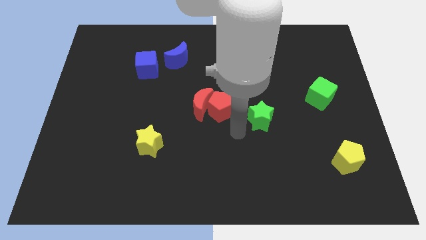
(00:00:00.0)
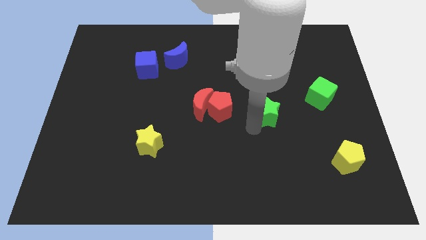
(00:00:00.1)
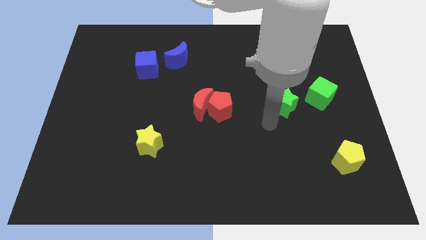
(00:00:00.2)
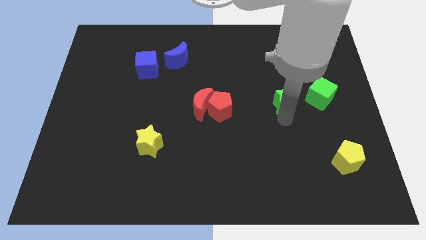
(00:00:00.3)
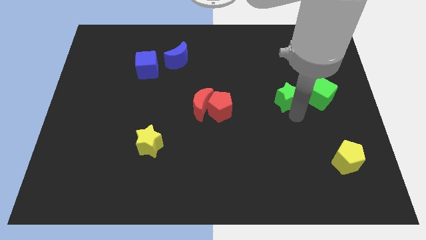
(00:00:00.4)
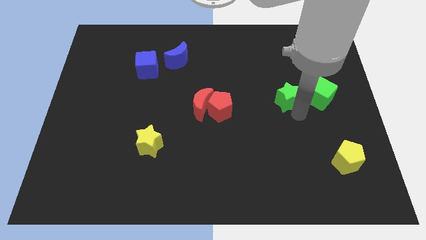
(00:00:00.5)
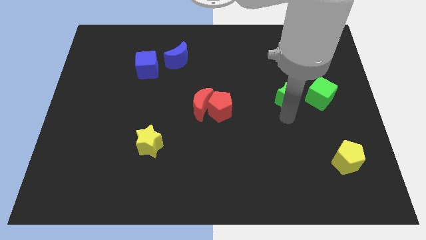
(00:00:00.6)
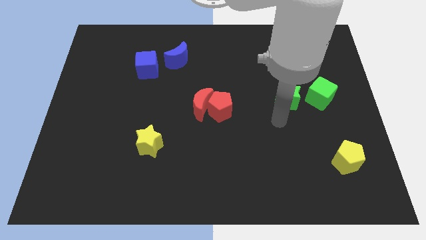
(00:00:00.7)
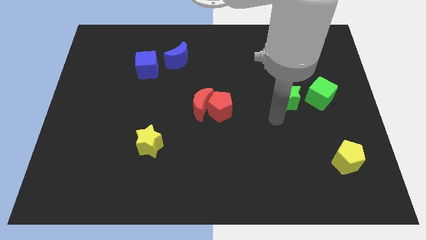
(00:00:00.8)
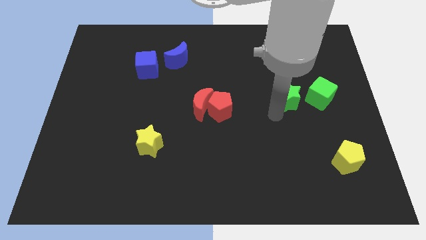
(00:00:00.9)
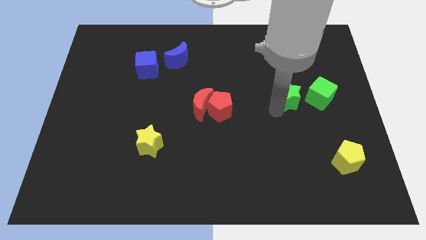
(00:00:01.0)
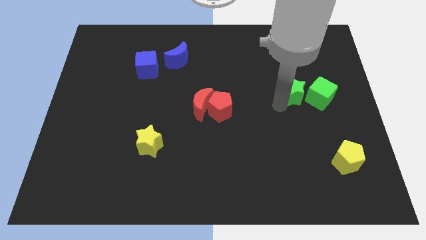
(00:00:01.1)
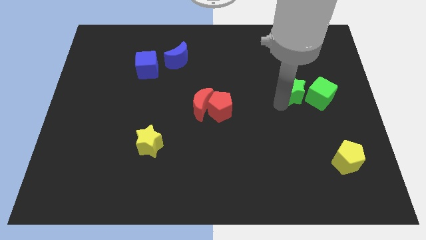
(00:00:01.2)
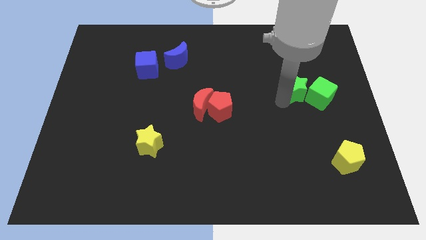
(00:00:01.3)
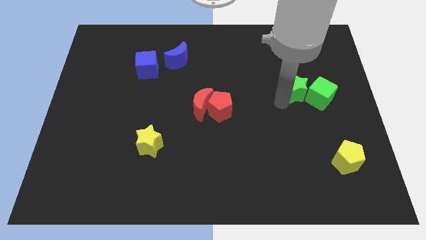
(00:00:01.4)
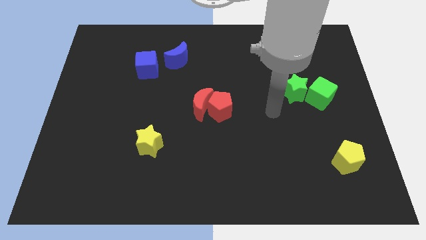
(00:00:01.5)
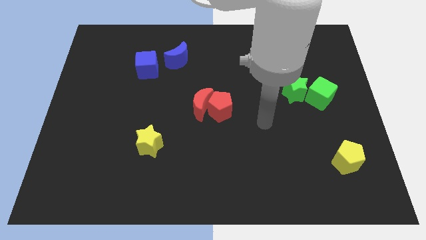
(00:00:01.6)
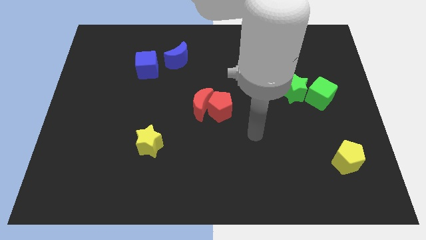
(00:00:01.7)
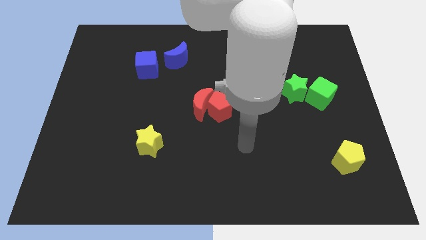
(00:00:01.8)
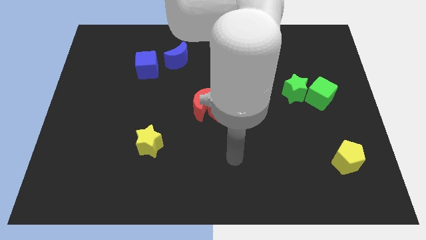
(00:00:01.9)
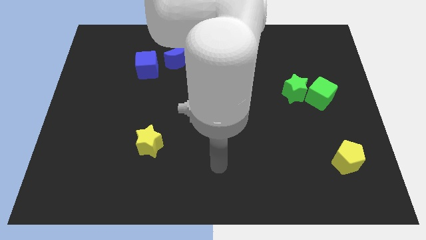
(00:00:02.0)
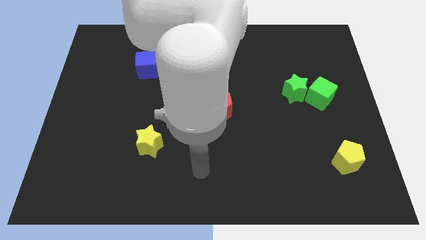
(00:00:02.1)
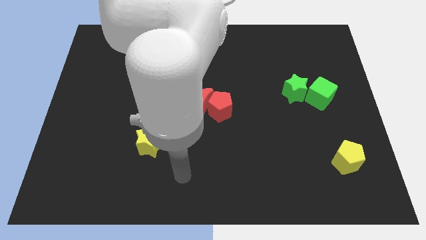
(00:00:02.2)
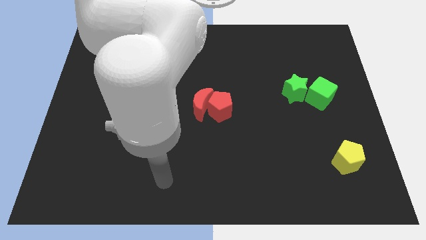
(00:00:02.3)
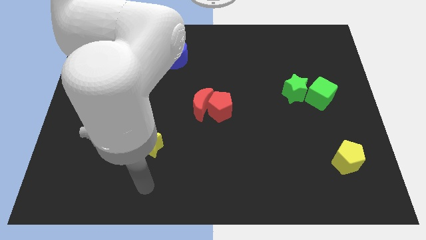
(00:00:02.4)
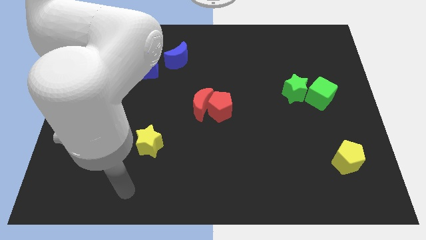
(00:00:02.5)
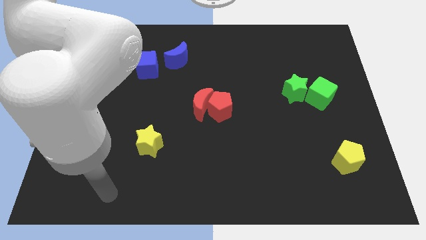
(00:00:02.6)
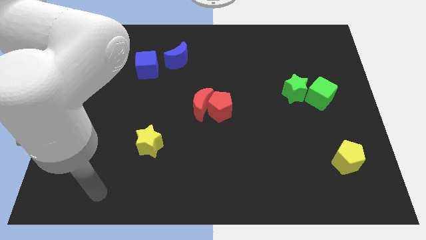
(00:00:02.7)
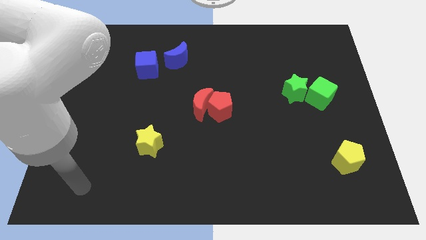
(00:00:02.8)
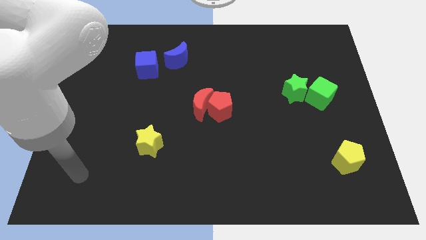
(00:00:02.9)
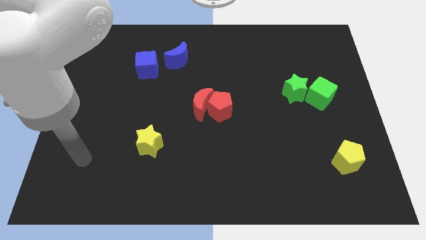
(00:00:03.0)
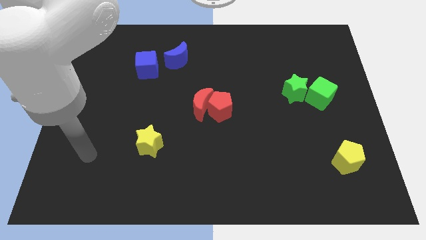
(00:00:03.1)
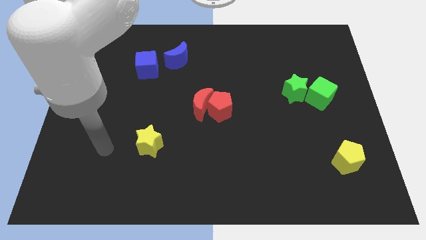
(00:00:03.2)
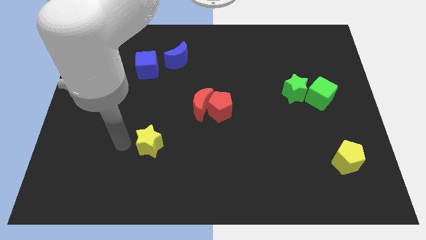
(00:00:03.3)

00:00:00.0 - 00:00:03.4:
move green star to the left of green cube

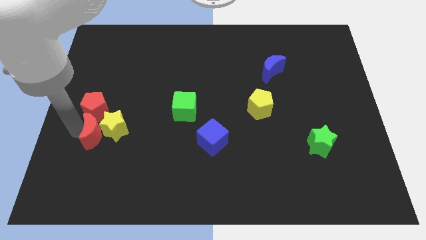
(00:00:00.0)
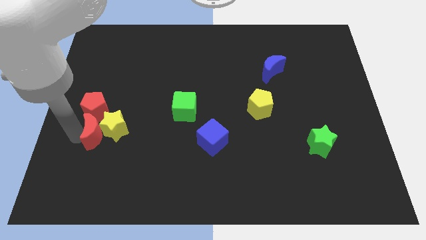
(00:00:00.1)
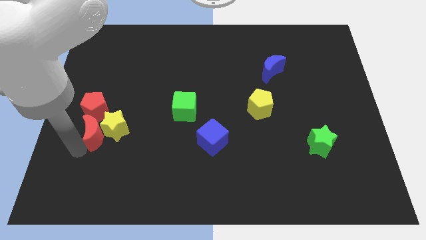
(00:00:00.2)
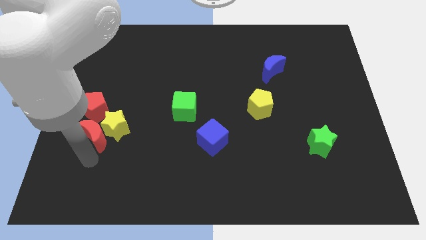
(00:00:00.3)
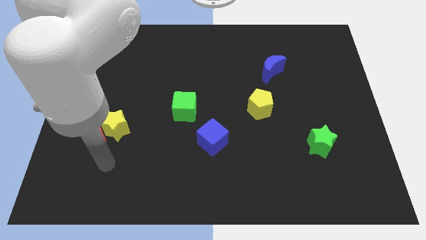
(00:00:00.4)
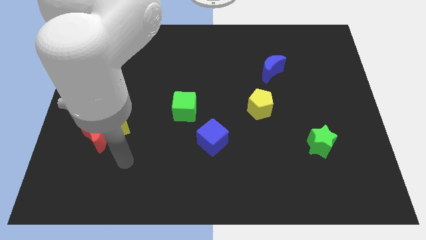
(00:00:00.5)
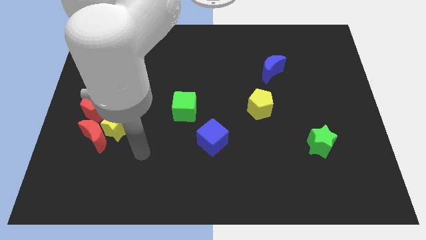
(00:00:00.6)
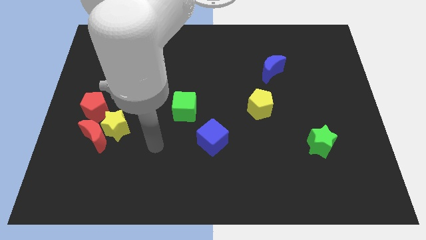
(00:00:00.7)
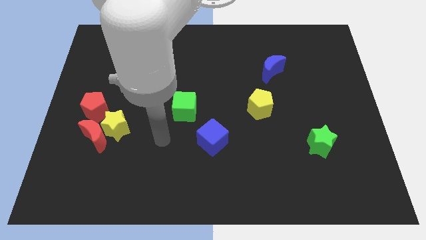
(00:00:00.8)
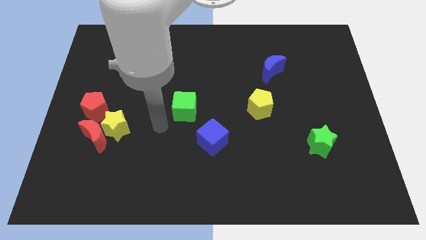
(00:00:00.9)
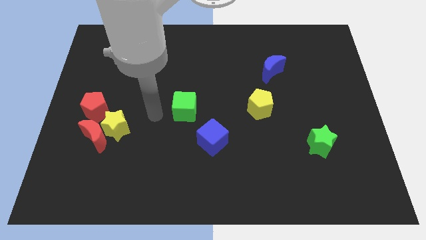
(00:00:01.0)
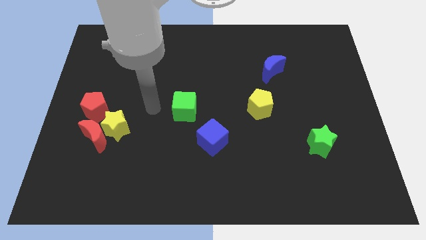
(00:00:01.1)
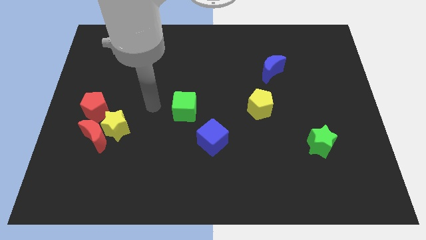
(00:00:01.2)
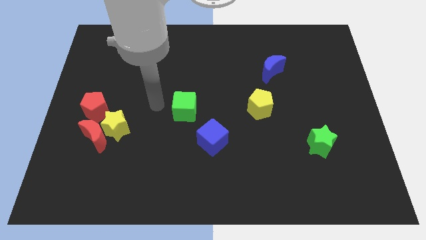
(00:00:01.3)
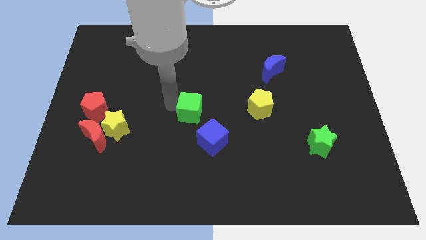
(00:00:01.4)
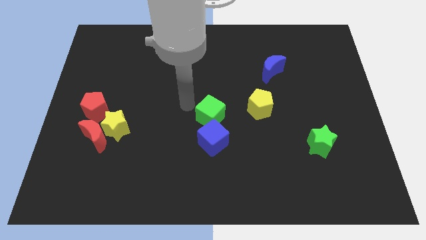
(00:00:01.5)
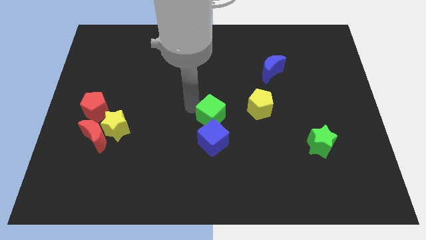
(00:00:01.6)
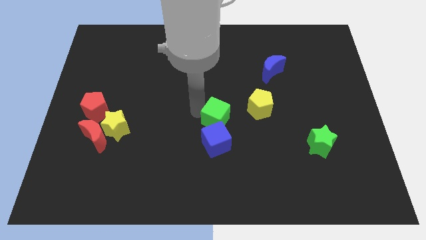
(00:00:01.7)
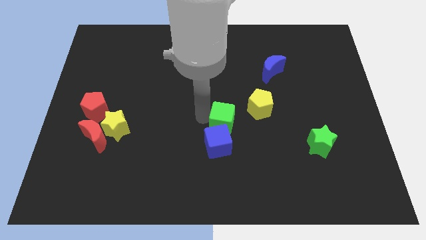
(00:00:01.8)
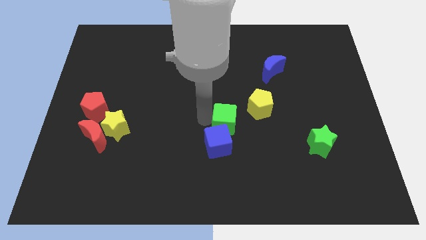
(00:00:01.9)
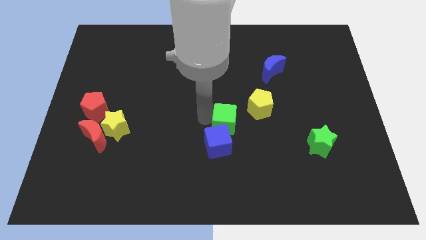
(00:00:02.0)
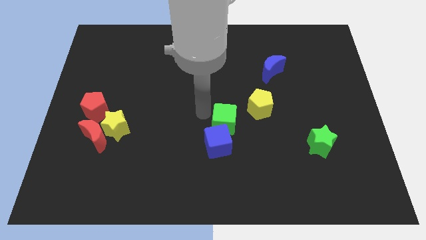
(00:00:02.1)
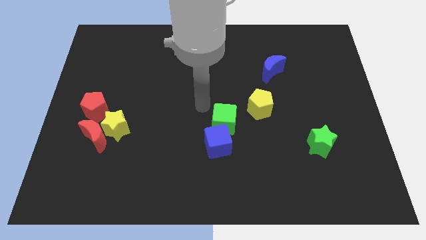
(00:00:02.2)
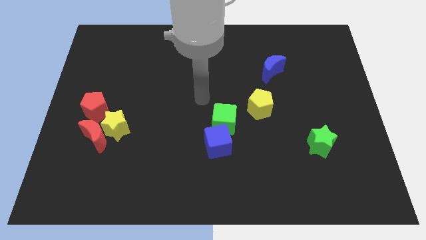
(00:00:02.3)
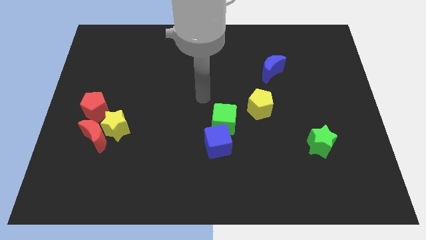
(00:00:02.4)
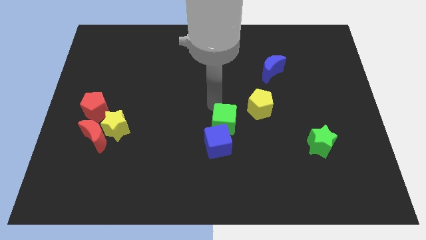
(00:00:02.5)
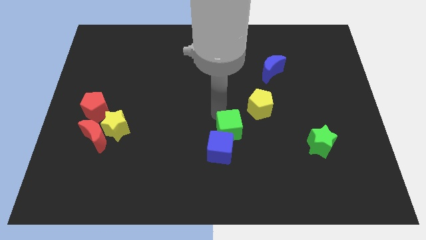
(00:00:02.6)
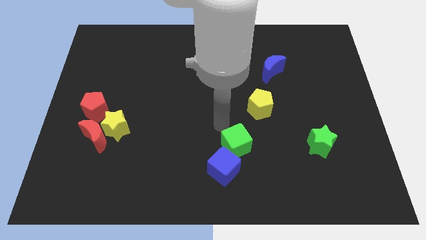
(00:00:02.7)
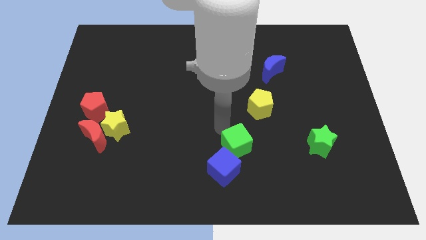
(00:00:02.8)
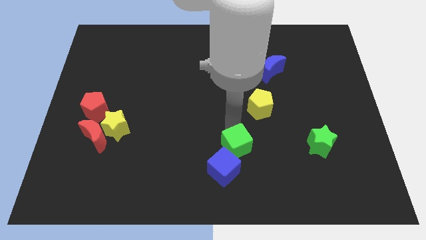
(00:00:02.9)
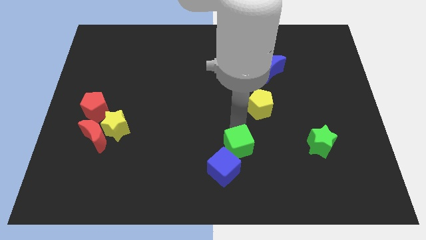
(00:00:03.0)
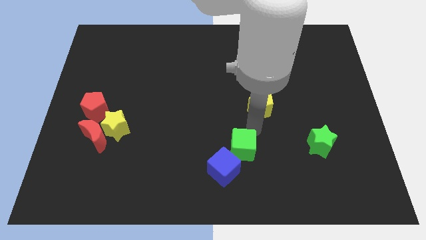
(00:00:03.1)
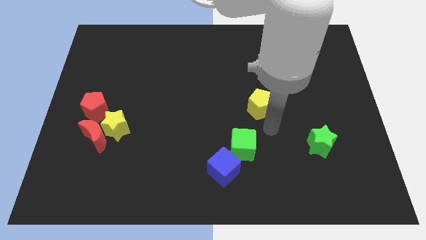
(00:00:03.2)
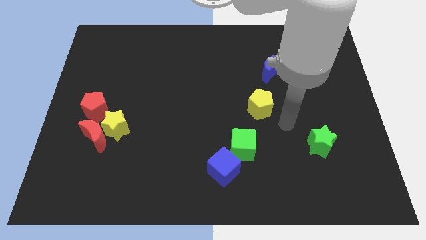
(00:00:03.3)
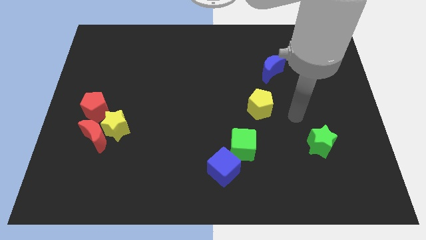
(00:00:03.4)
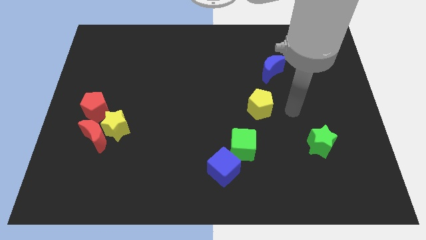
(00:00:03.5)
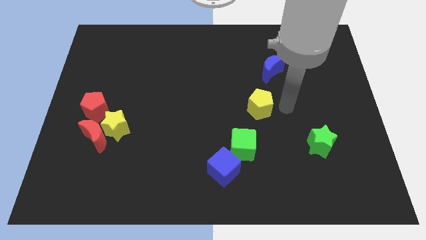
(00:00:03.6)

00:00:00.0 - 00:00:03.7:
push the green cube into the blue cube

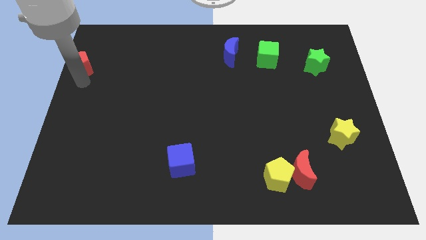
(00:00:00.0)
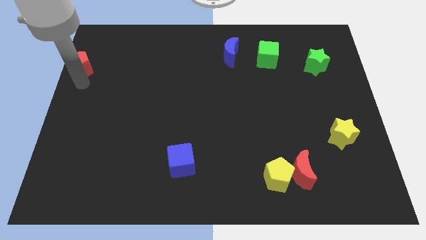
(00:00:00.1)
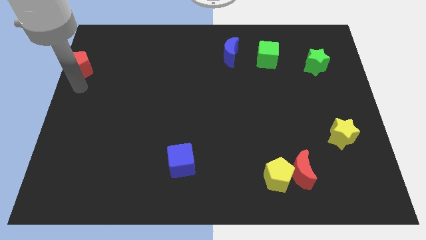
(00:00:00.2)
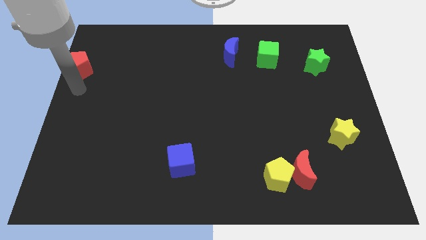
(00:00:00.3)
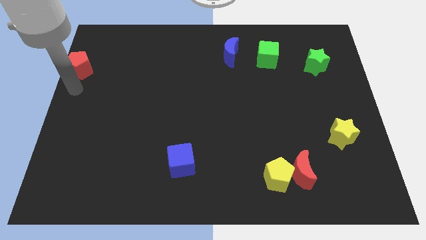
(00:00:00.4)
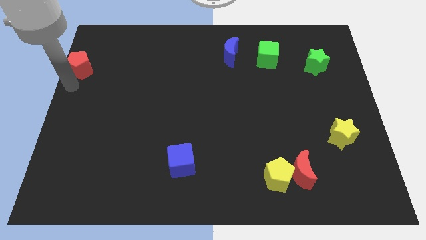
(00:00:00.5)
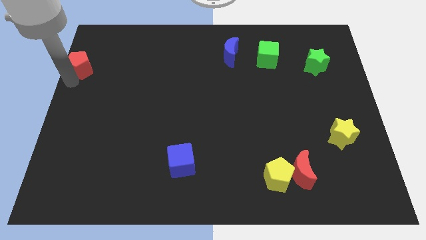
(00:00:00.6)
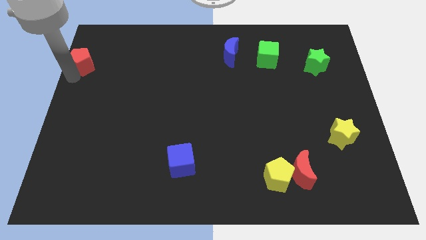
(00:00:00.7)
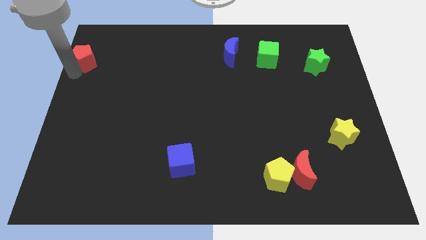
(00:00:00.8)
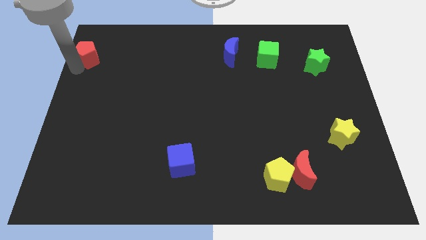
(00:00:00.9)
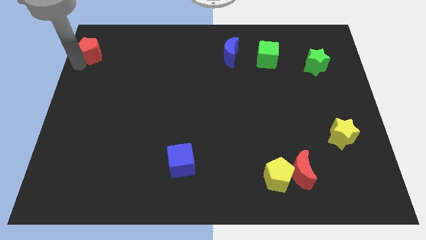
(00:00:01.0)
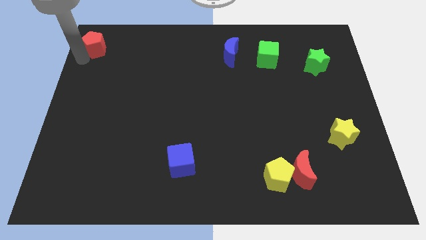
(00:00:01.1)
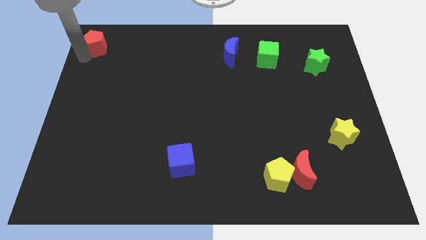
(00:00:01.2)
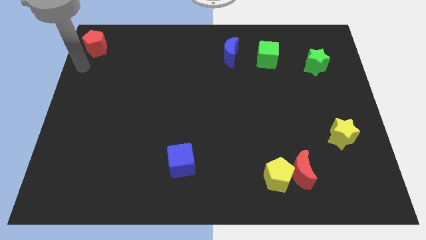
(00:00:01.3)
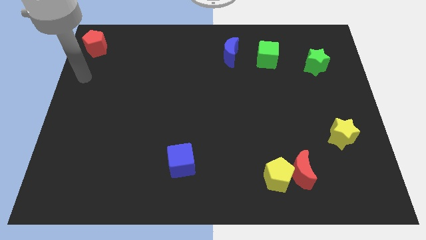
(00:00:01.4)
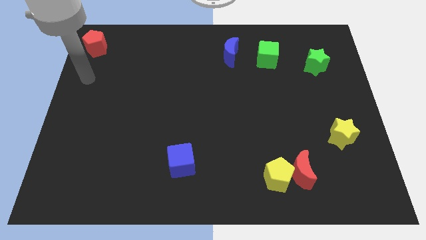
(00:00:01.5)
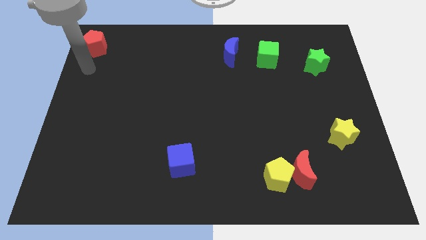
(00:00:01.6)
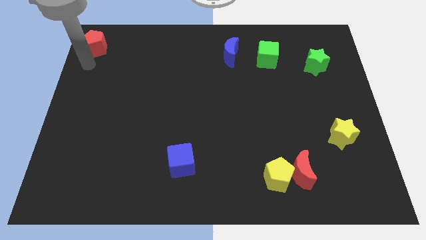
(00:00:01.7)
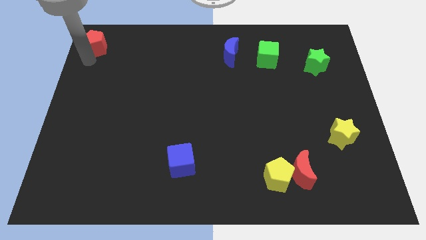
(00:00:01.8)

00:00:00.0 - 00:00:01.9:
push the red pentagon to the top left corner of the board
